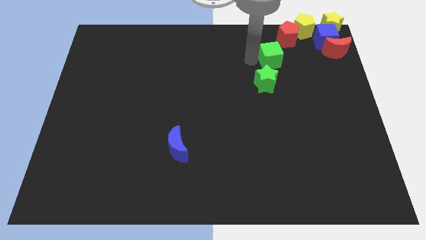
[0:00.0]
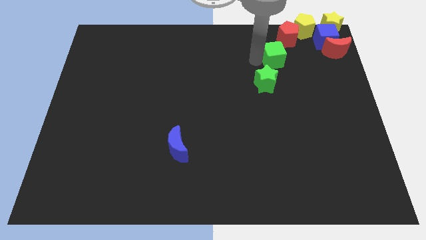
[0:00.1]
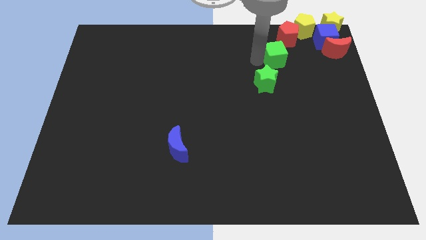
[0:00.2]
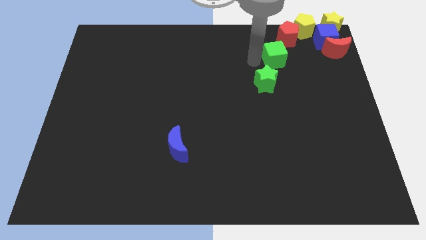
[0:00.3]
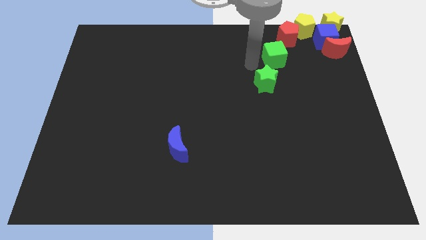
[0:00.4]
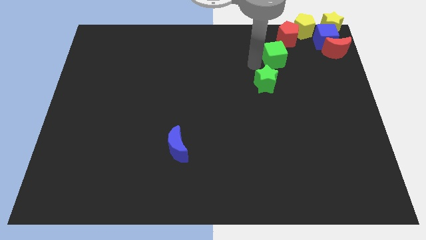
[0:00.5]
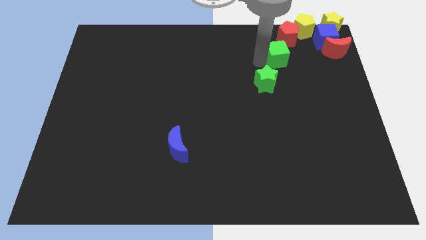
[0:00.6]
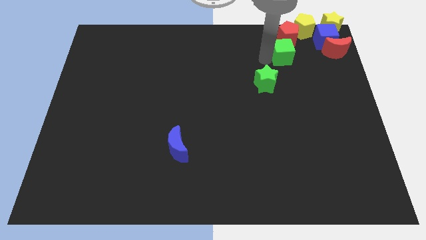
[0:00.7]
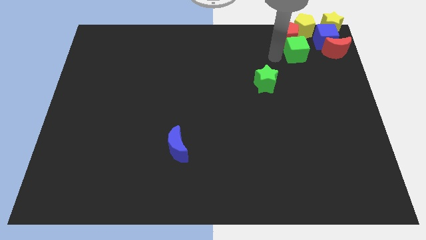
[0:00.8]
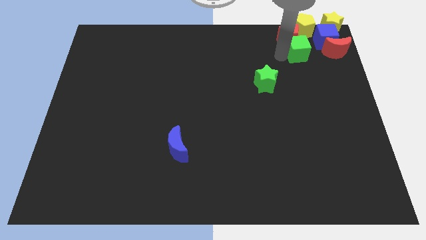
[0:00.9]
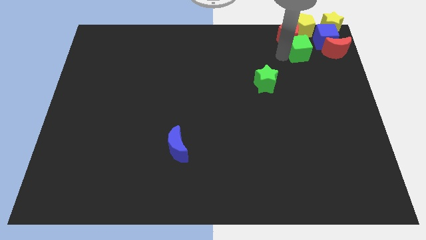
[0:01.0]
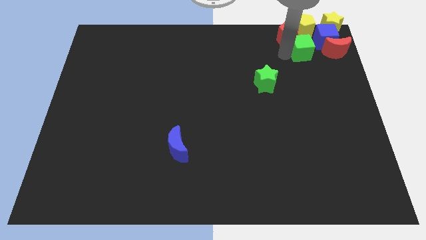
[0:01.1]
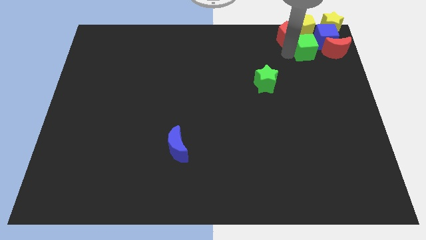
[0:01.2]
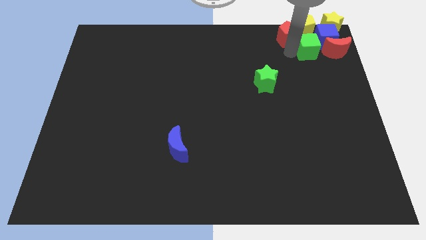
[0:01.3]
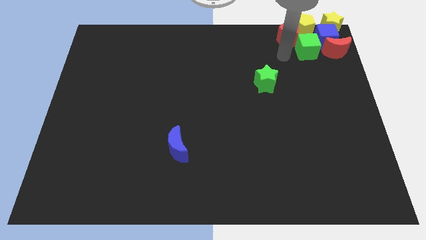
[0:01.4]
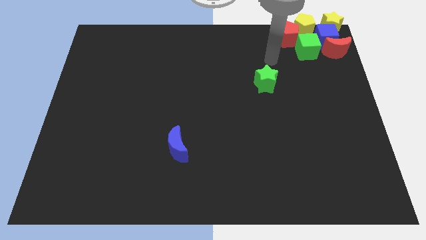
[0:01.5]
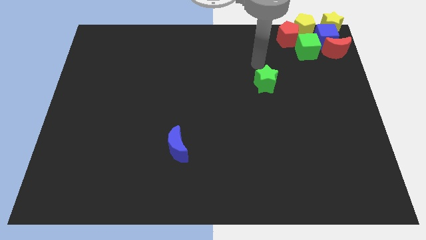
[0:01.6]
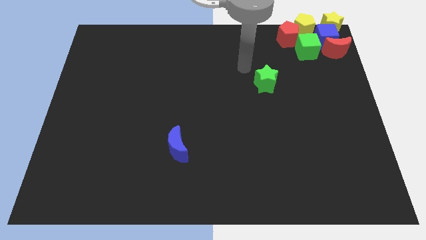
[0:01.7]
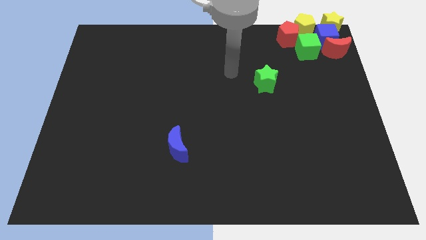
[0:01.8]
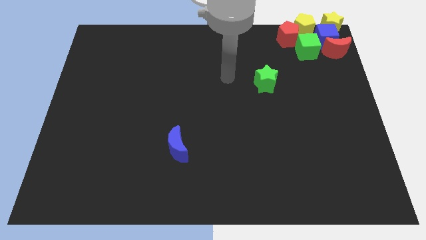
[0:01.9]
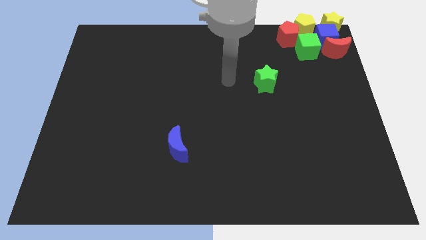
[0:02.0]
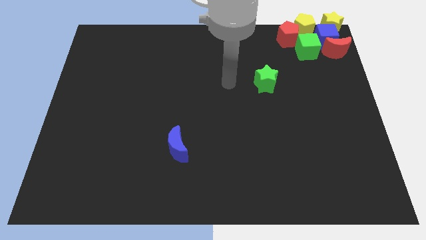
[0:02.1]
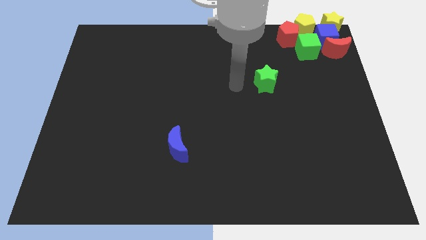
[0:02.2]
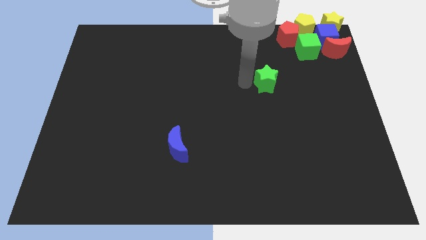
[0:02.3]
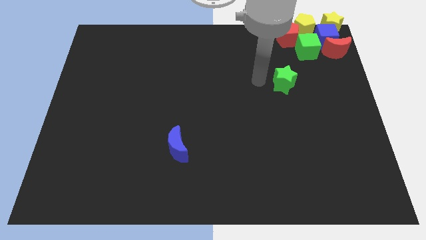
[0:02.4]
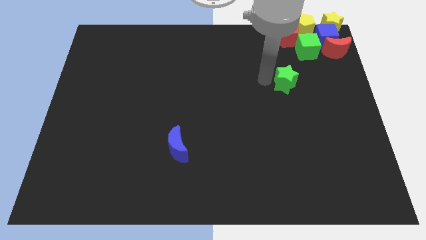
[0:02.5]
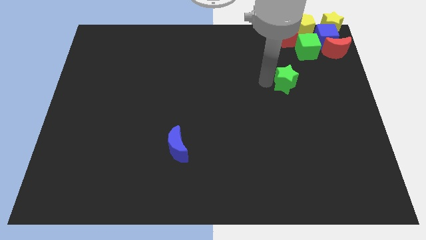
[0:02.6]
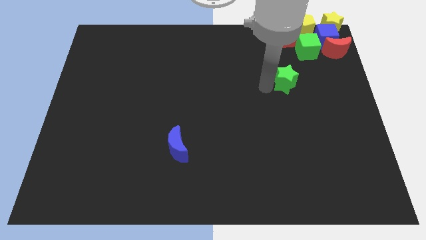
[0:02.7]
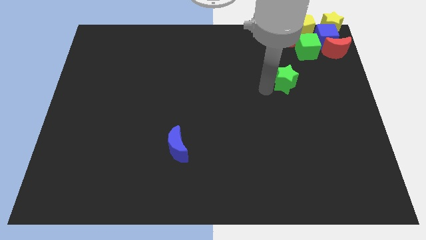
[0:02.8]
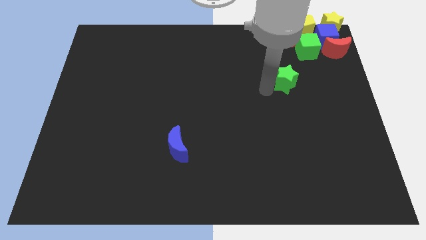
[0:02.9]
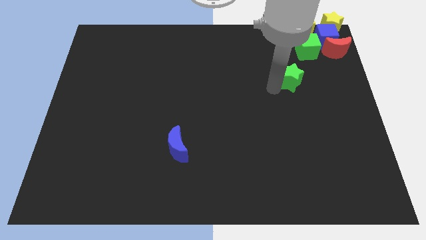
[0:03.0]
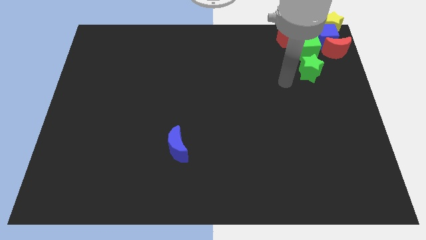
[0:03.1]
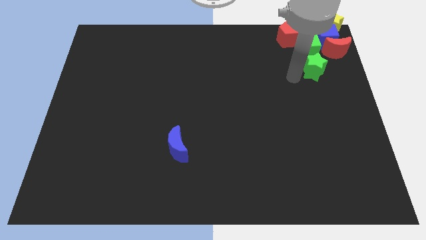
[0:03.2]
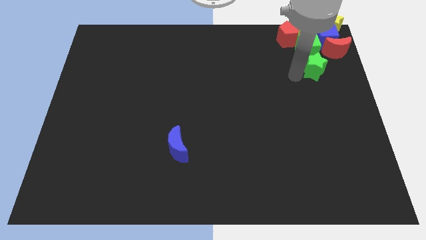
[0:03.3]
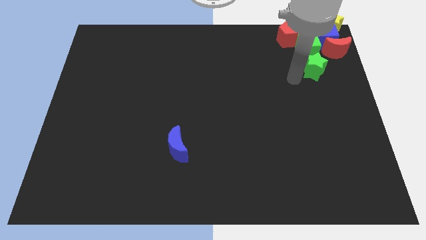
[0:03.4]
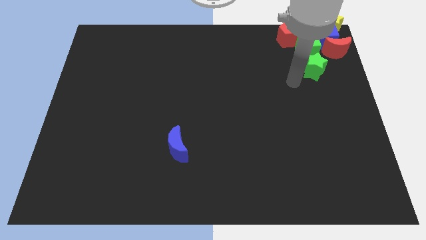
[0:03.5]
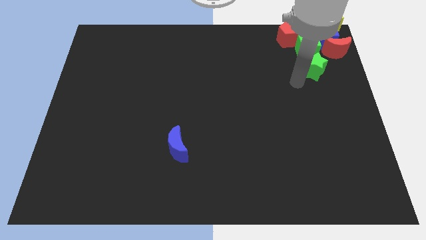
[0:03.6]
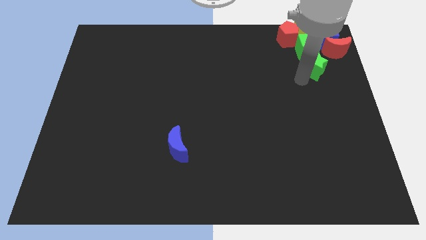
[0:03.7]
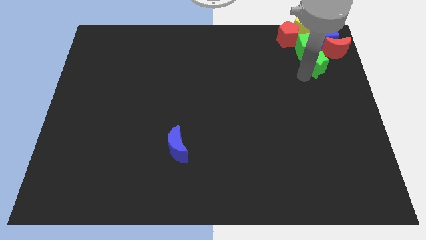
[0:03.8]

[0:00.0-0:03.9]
push the green blocks to the group of objects

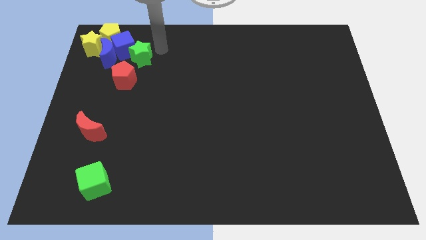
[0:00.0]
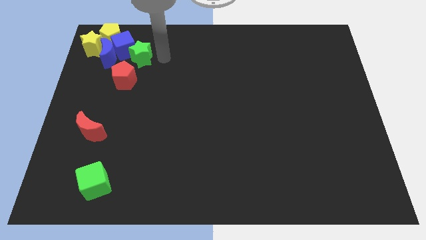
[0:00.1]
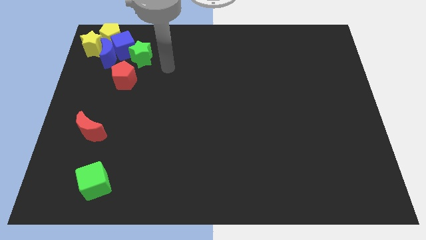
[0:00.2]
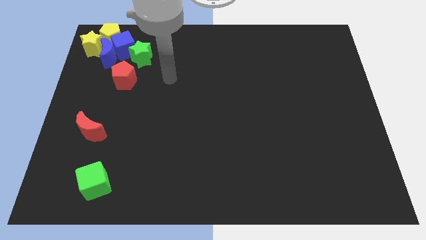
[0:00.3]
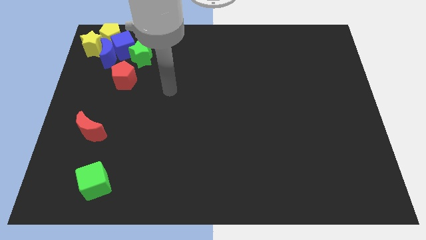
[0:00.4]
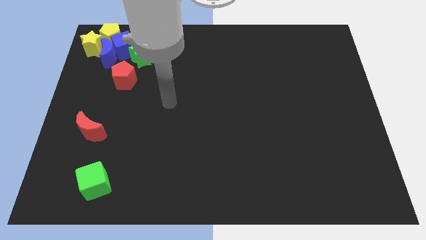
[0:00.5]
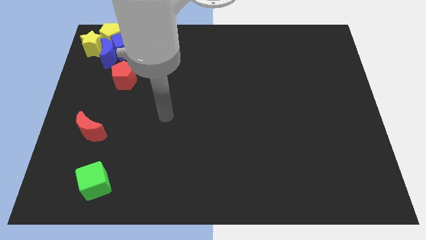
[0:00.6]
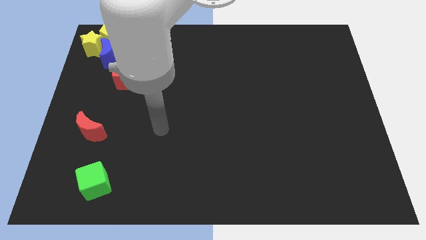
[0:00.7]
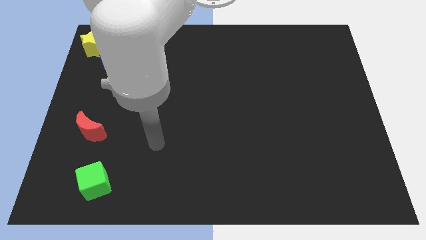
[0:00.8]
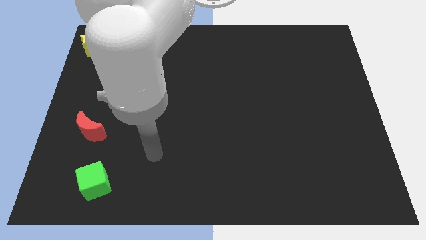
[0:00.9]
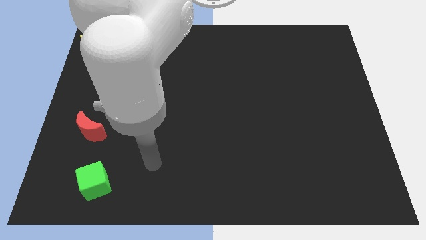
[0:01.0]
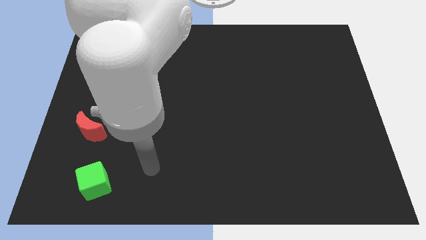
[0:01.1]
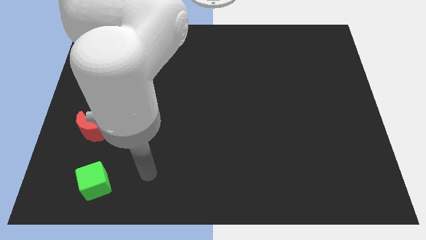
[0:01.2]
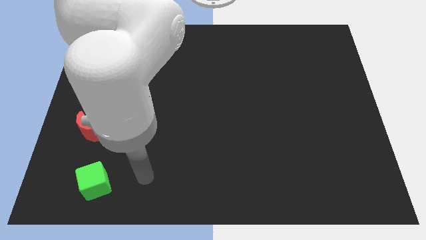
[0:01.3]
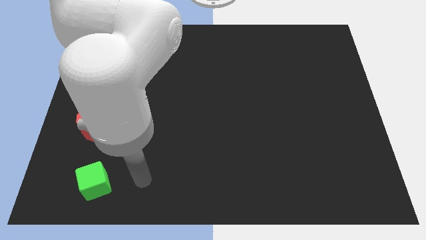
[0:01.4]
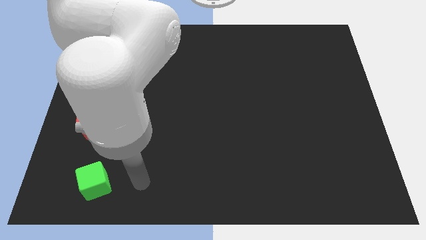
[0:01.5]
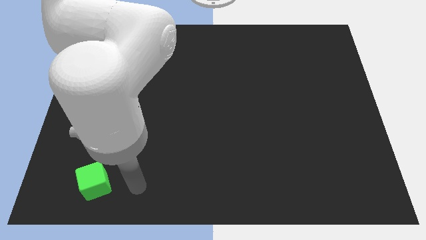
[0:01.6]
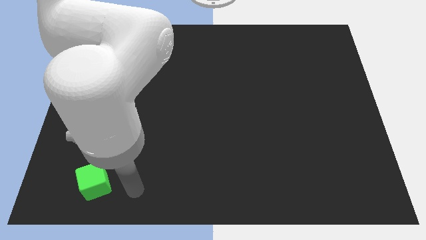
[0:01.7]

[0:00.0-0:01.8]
move your hand towards the green cube

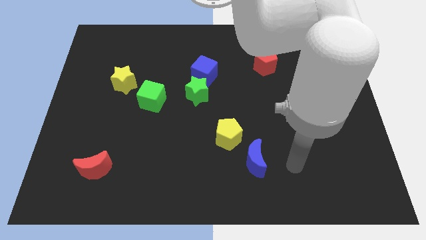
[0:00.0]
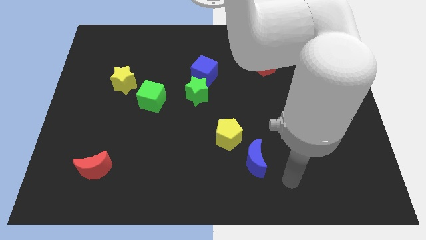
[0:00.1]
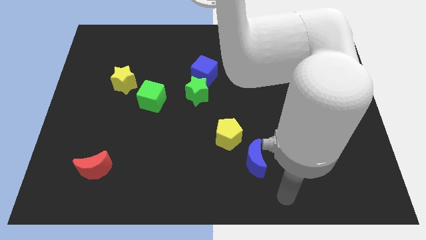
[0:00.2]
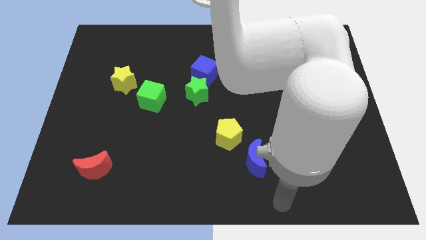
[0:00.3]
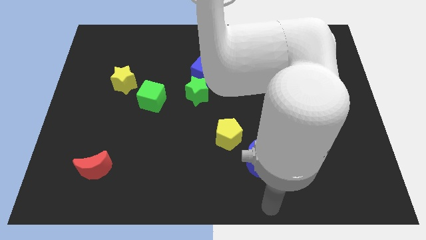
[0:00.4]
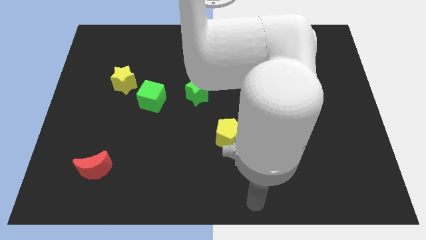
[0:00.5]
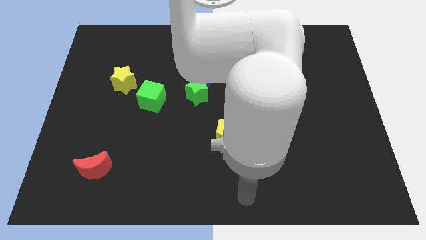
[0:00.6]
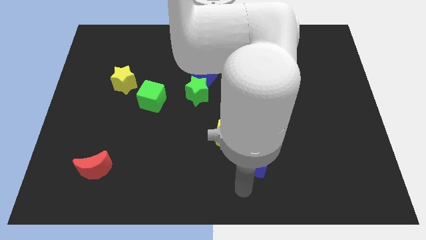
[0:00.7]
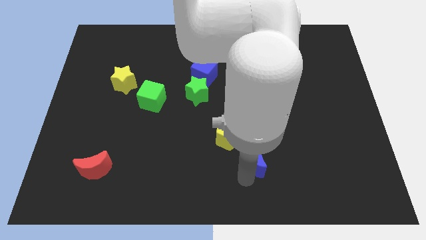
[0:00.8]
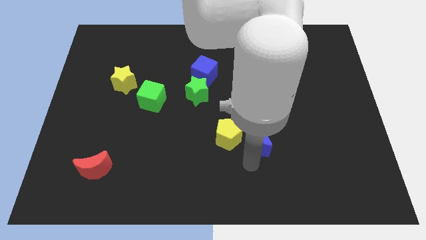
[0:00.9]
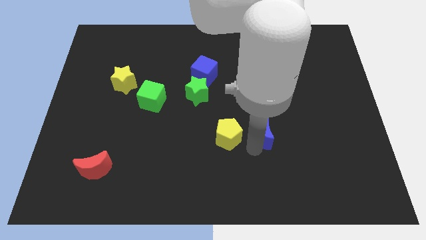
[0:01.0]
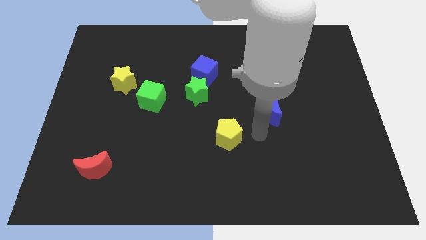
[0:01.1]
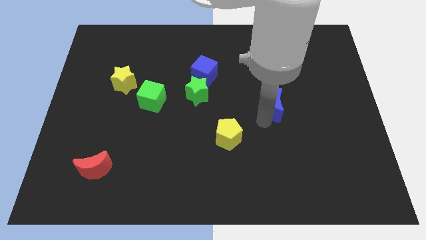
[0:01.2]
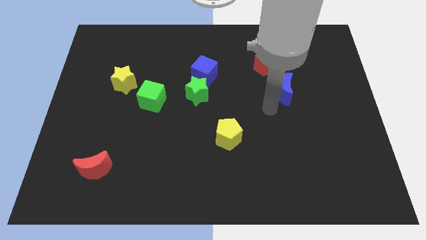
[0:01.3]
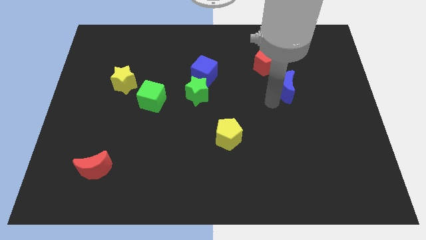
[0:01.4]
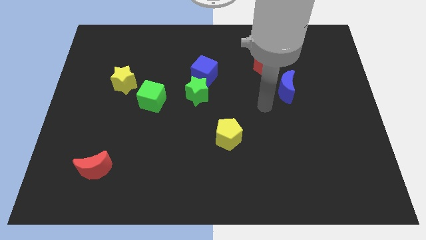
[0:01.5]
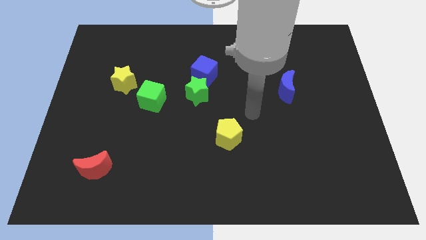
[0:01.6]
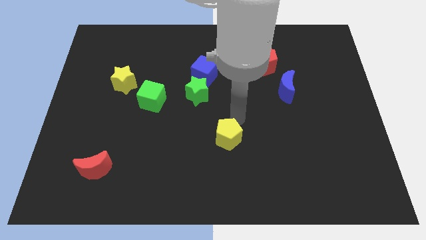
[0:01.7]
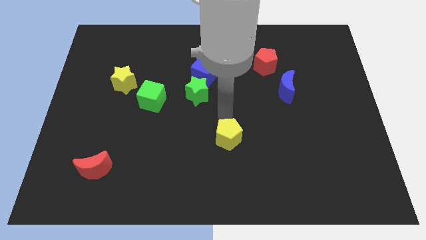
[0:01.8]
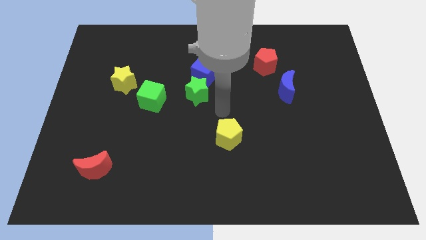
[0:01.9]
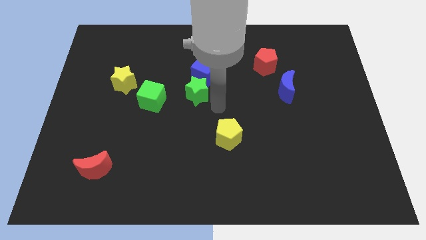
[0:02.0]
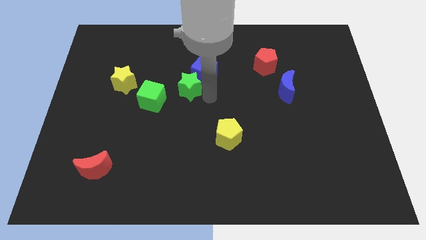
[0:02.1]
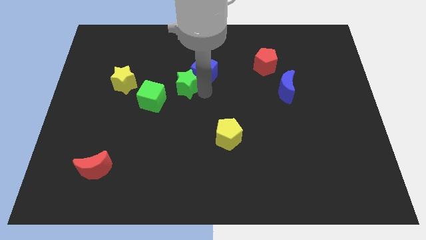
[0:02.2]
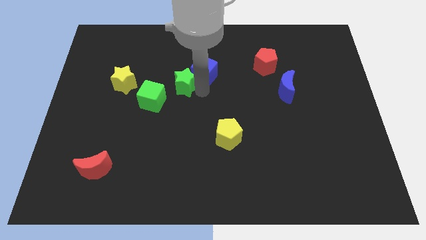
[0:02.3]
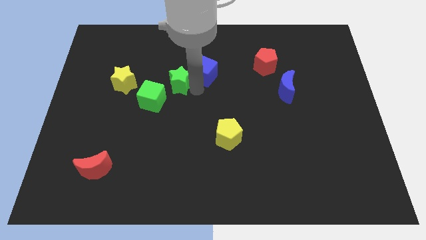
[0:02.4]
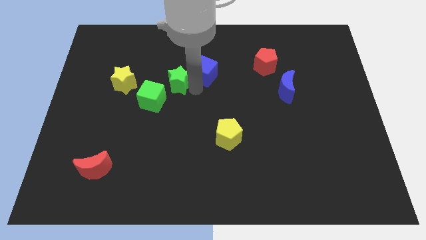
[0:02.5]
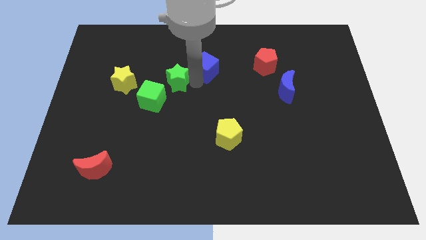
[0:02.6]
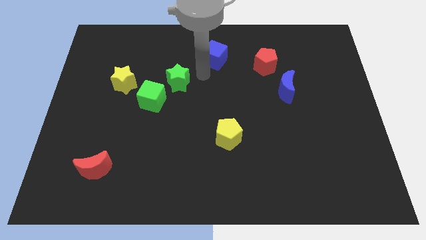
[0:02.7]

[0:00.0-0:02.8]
touch the bottom of blue blocks and green star
